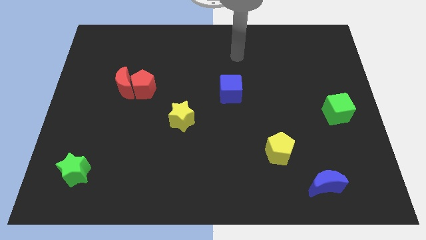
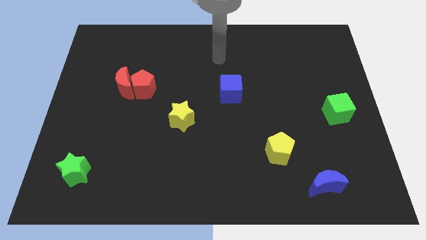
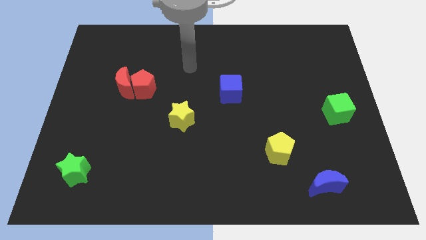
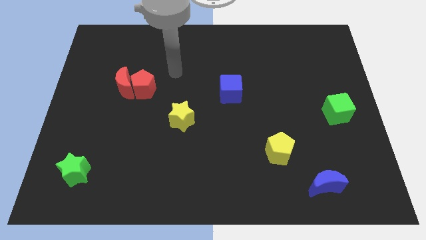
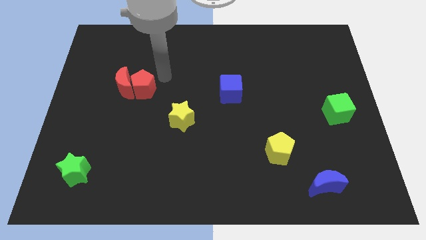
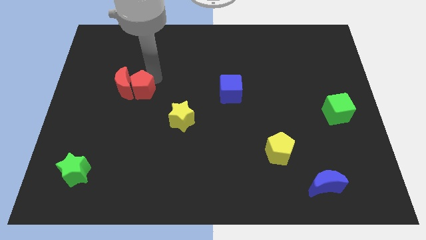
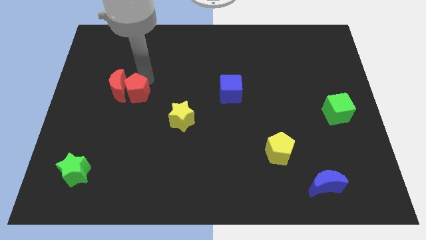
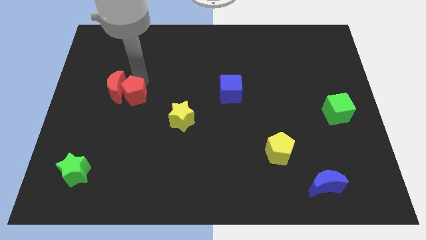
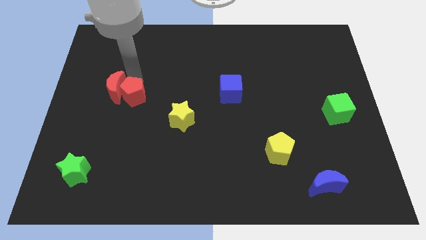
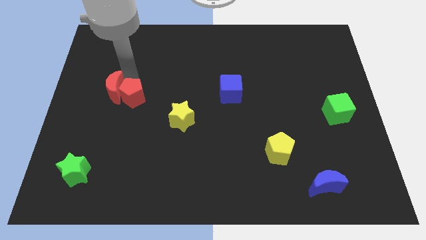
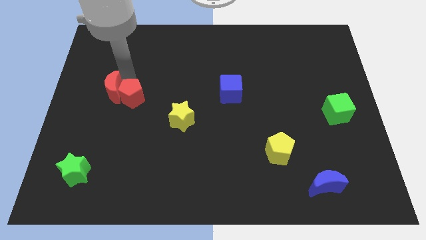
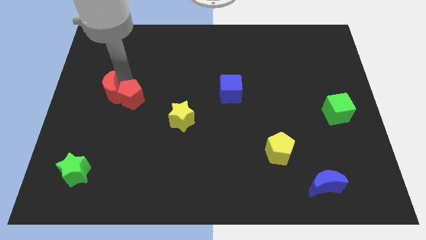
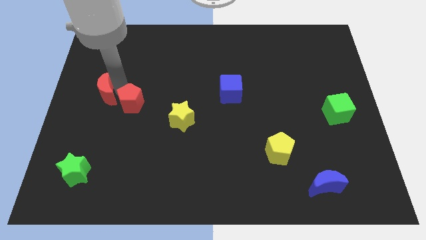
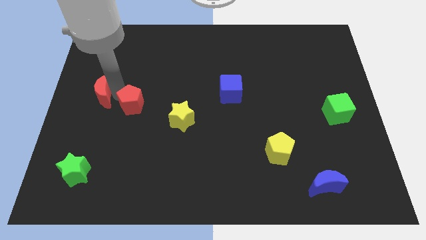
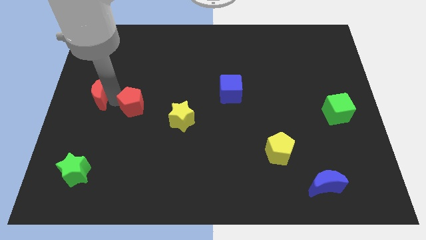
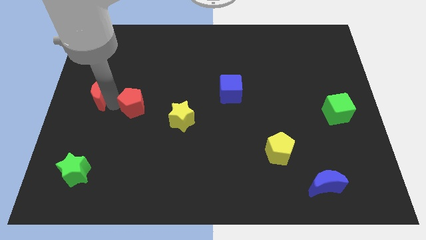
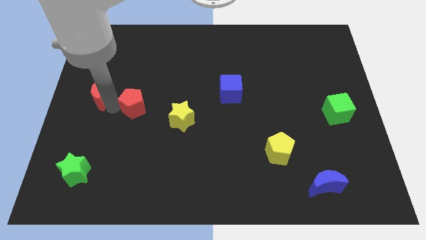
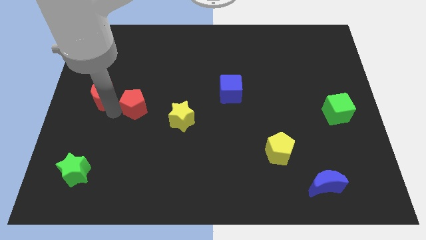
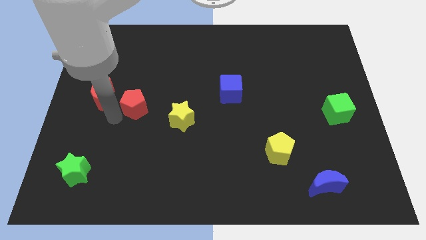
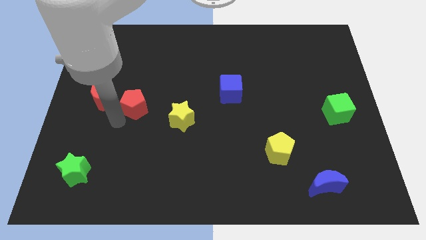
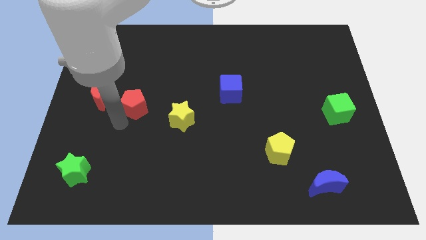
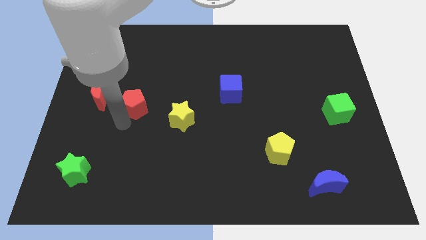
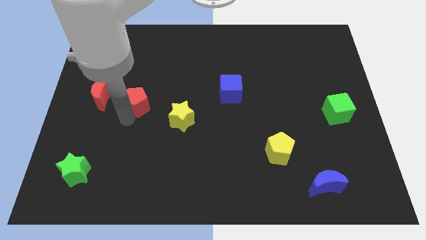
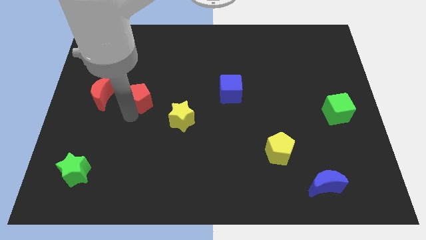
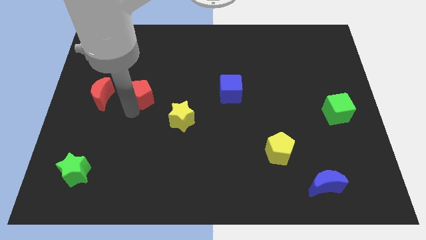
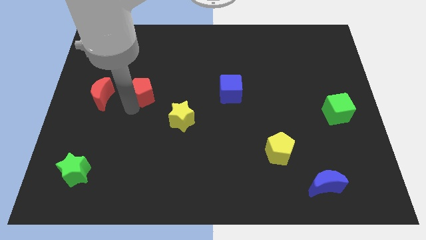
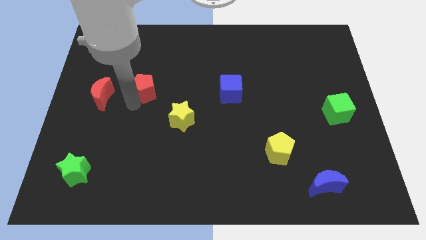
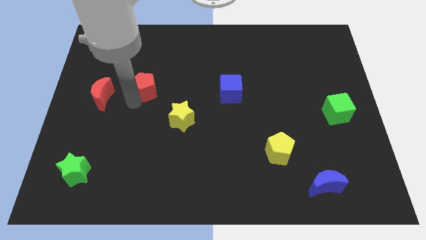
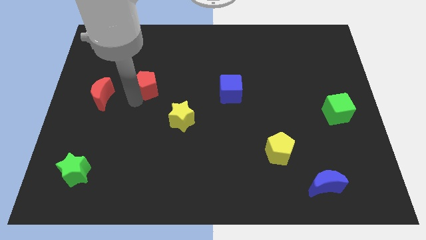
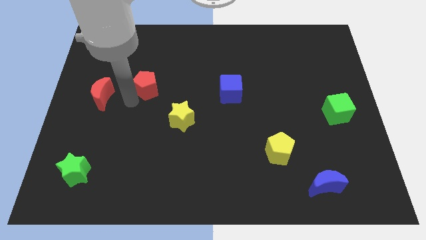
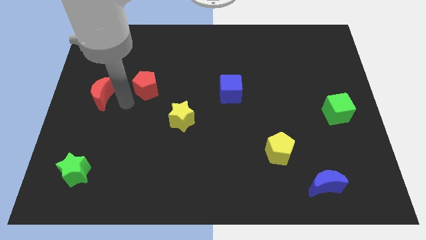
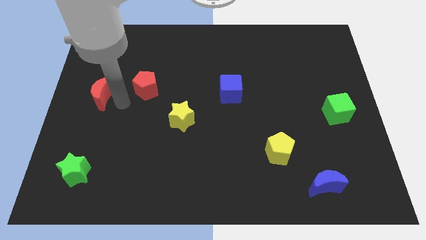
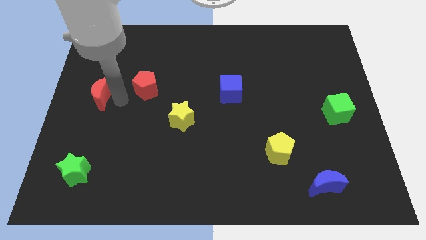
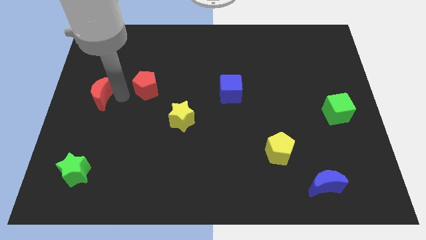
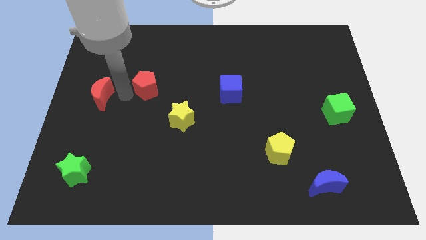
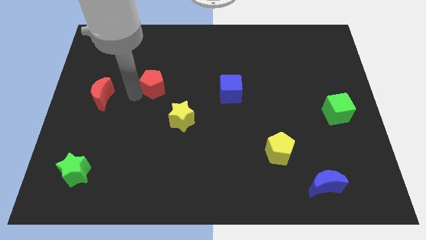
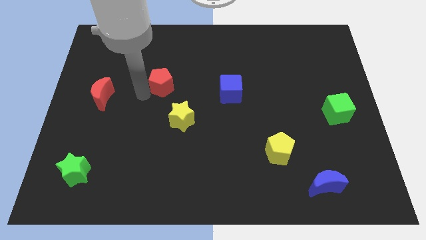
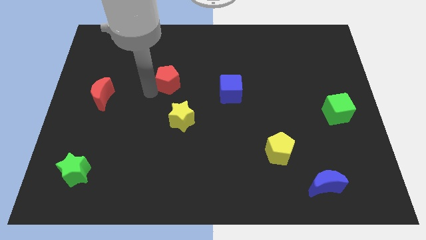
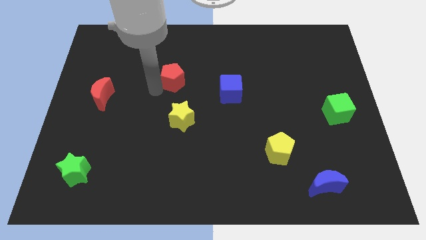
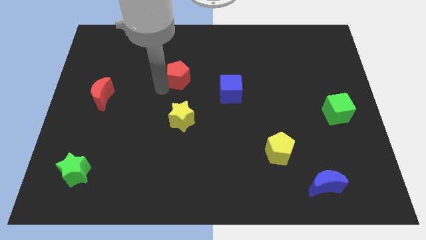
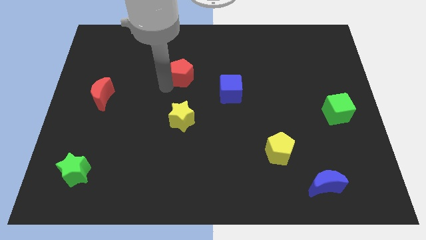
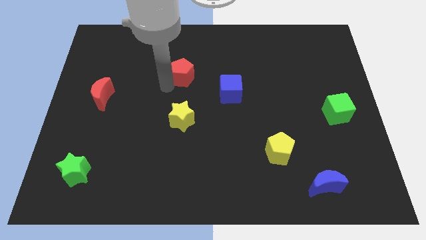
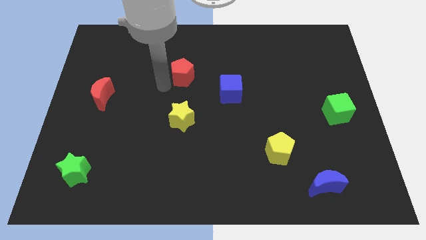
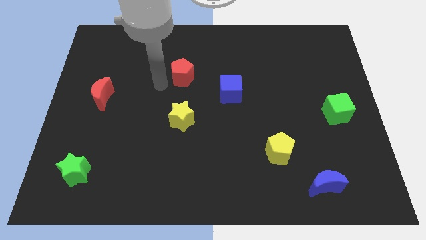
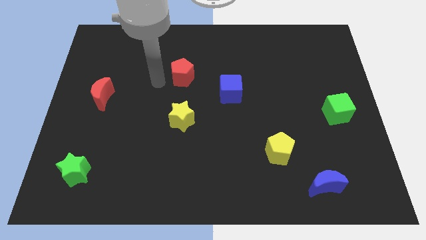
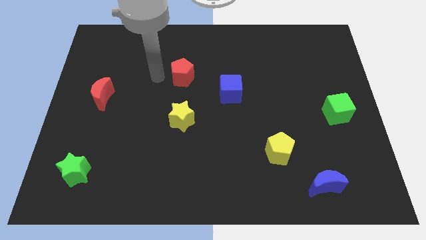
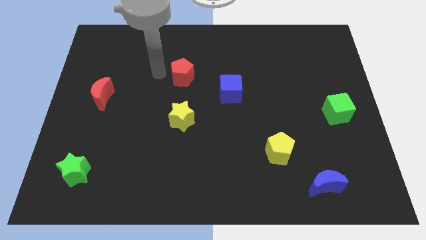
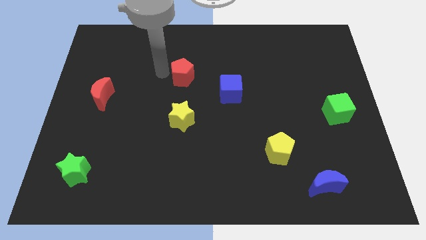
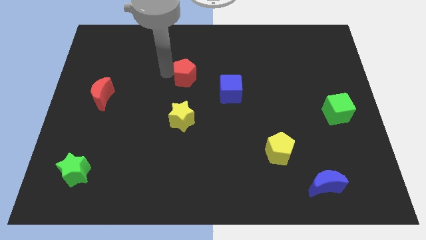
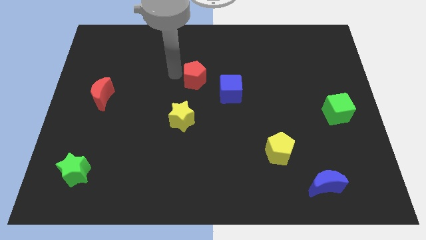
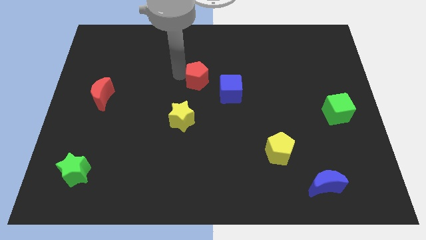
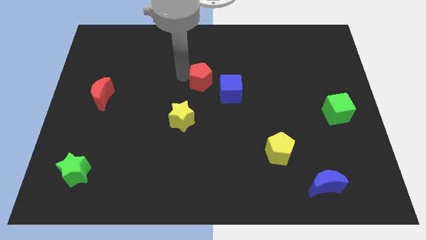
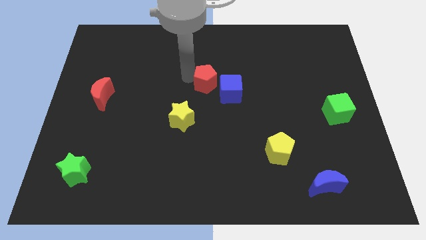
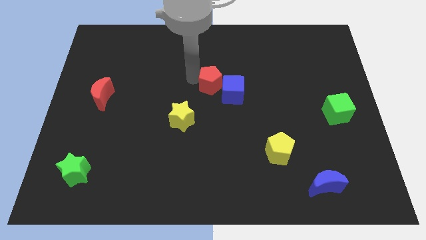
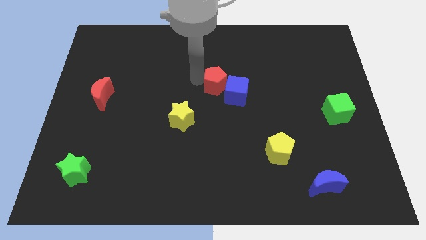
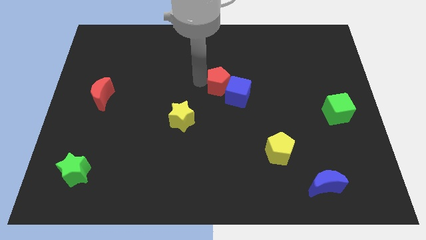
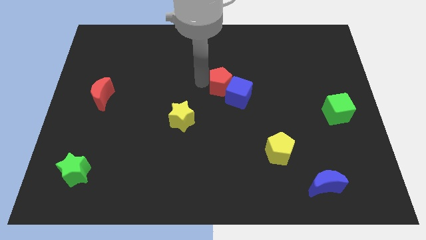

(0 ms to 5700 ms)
push the red pentagon to the blue cube

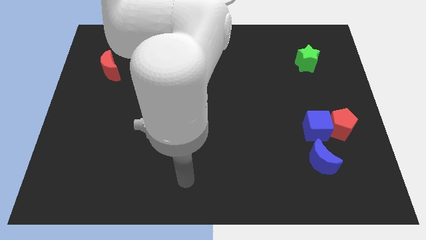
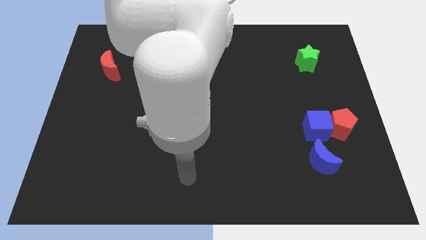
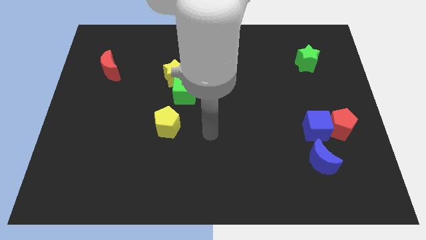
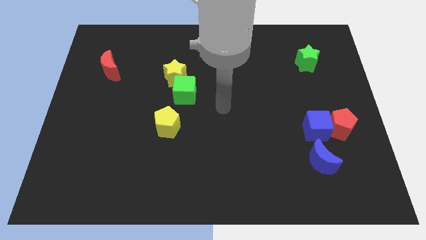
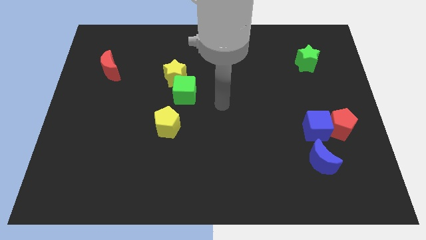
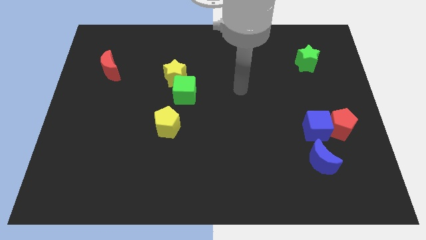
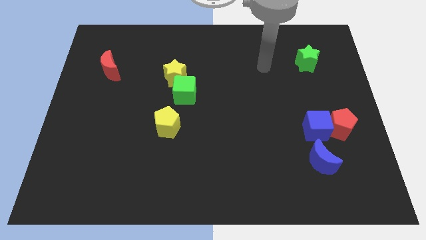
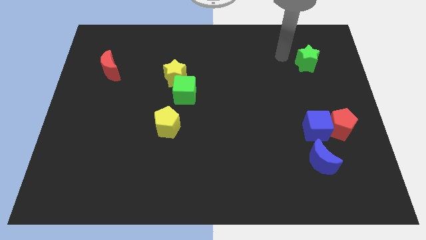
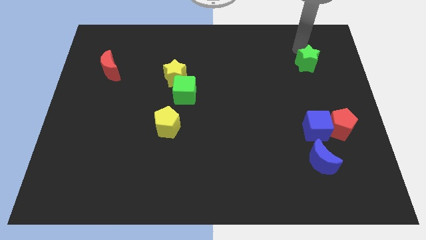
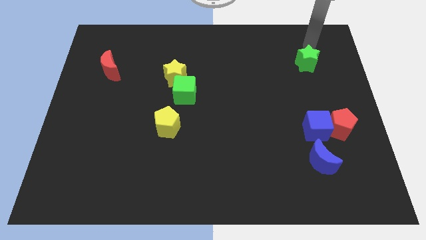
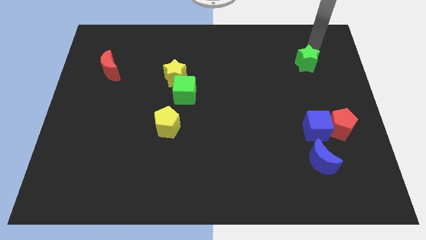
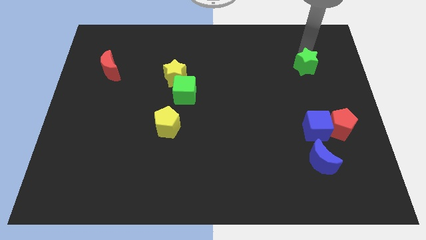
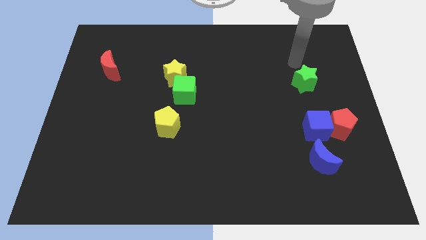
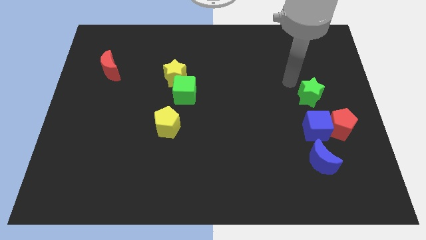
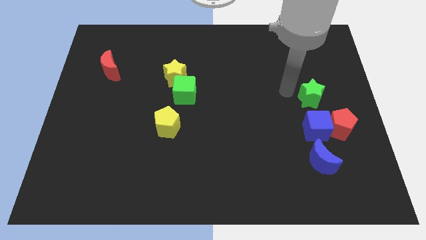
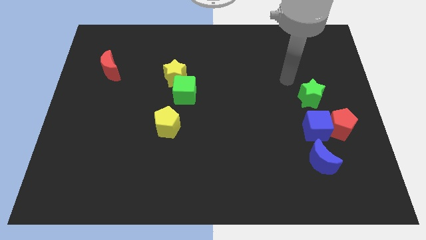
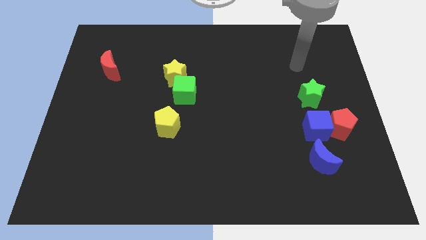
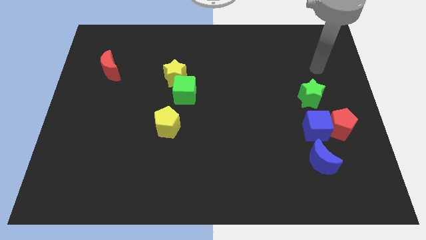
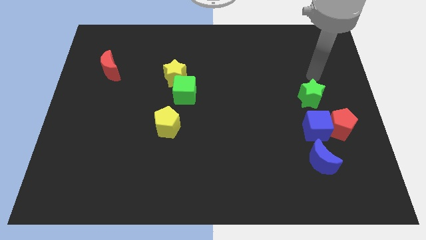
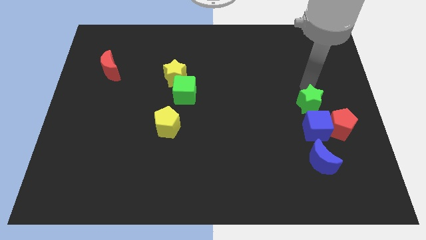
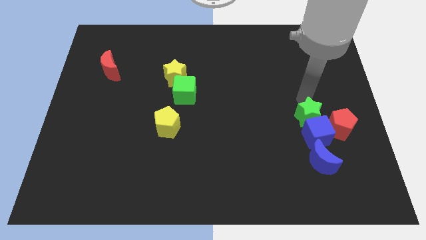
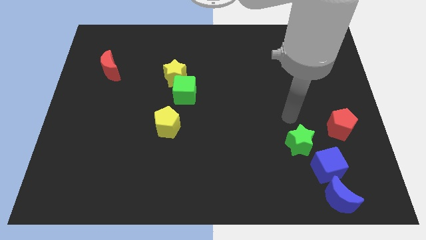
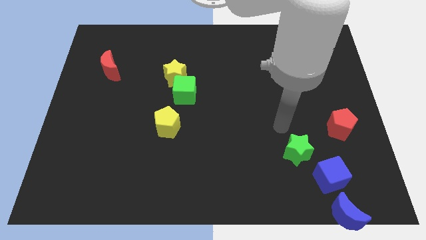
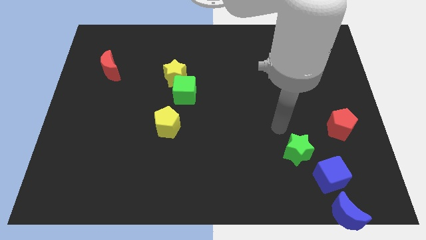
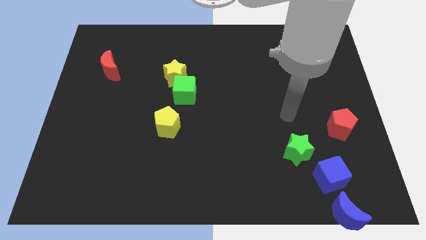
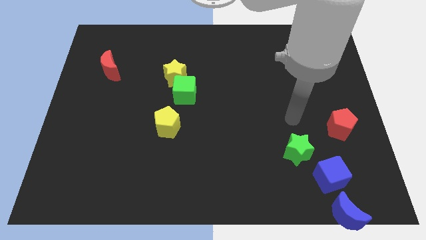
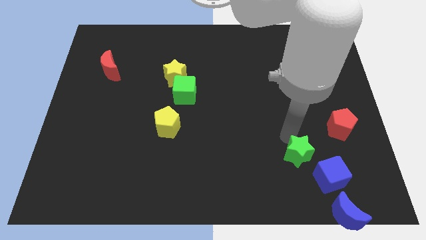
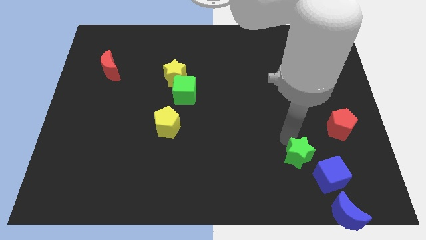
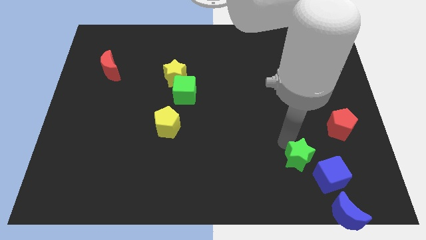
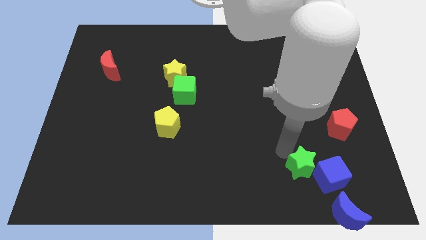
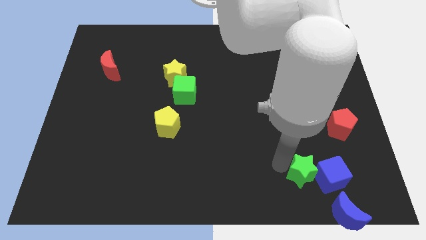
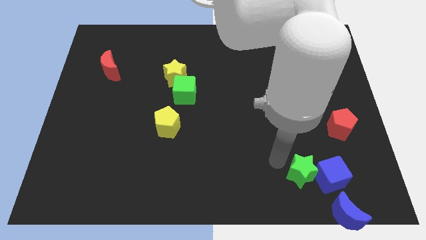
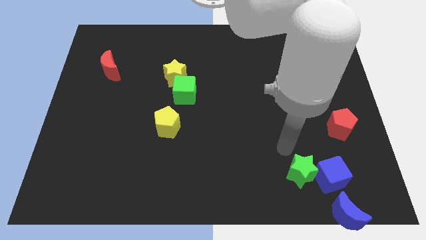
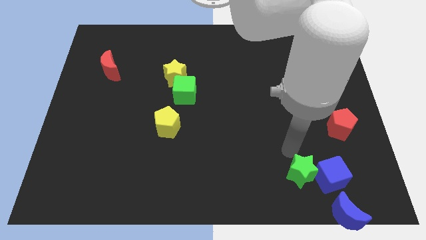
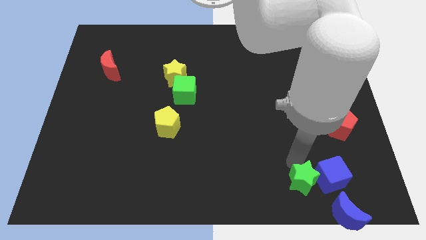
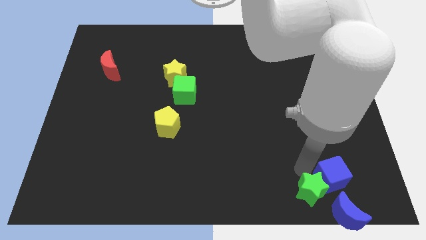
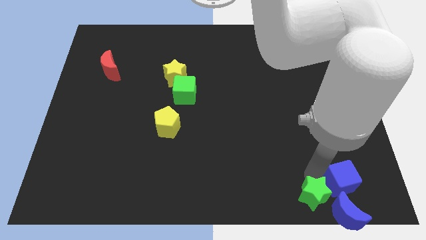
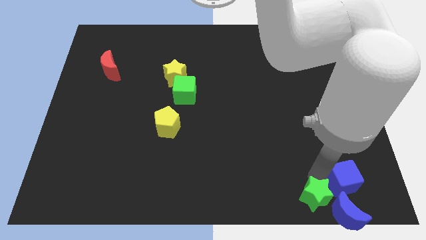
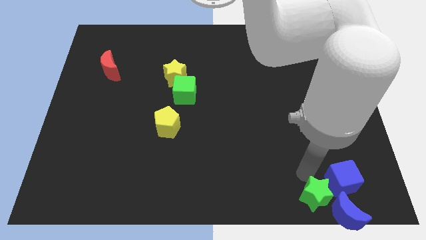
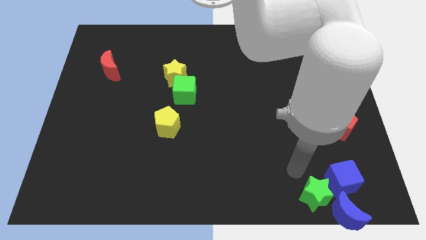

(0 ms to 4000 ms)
move the green star towards the blue moon
